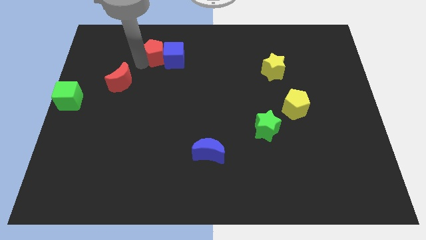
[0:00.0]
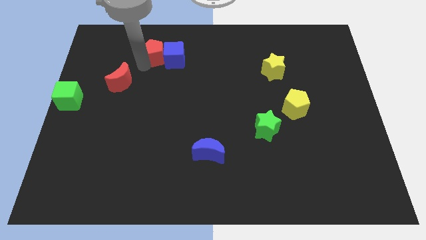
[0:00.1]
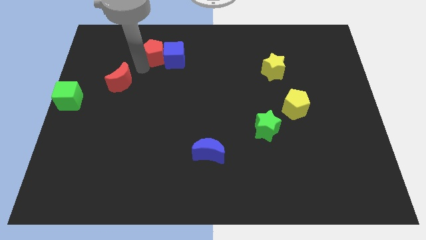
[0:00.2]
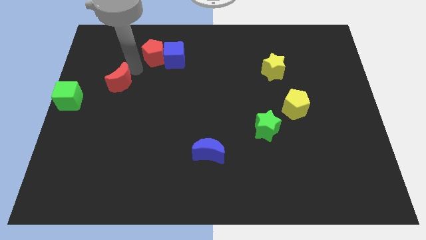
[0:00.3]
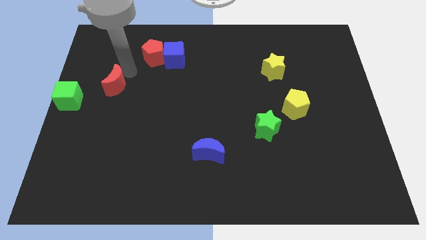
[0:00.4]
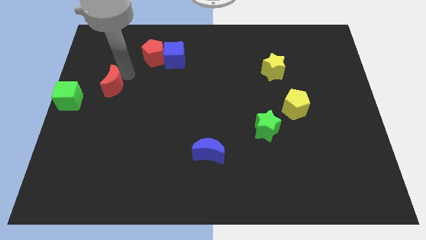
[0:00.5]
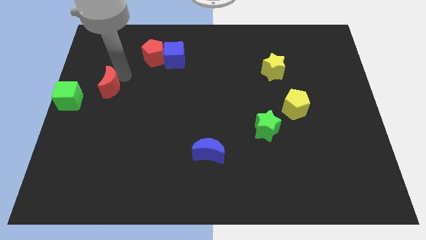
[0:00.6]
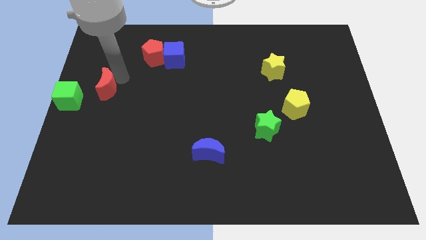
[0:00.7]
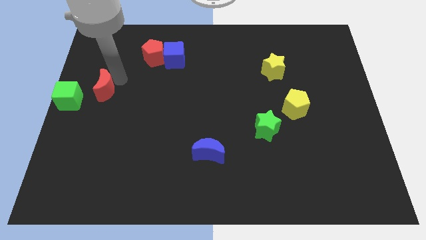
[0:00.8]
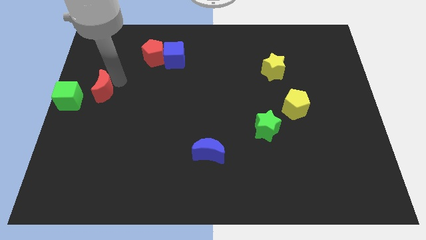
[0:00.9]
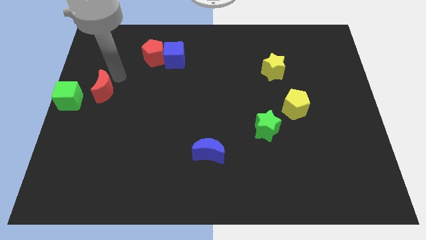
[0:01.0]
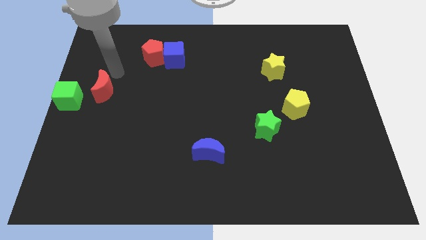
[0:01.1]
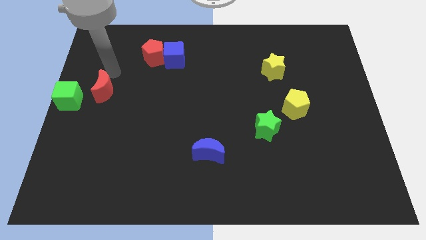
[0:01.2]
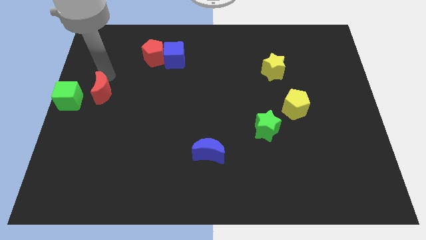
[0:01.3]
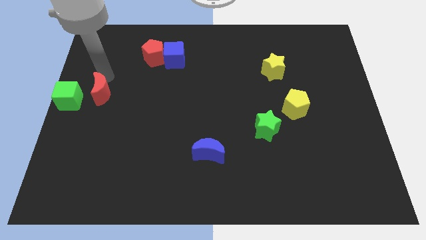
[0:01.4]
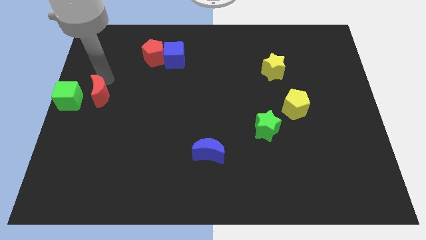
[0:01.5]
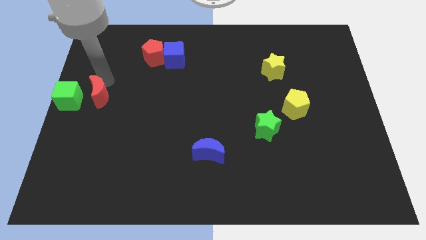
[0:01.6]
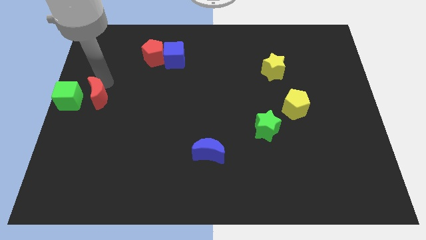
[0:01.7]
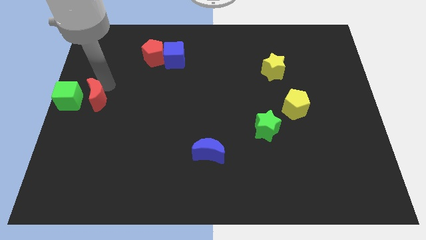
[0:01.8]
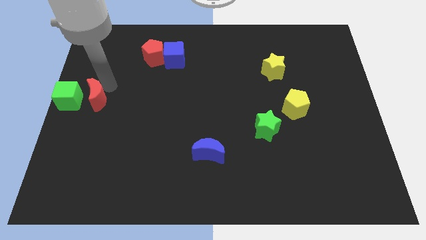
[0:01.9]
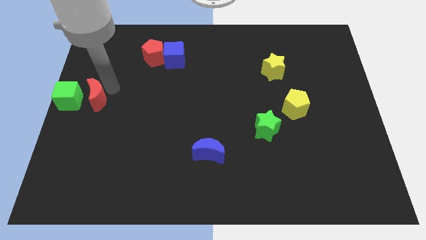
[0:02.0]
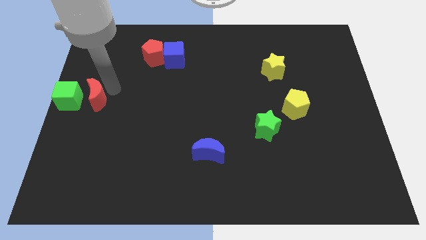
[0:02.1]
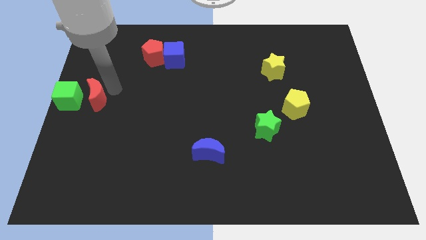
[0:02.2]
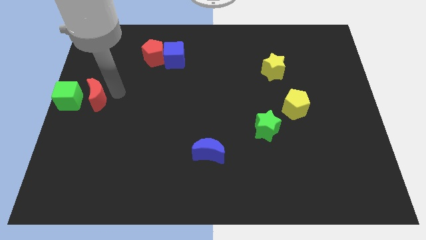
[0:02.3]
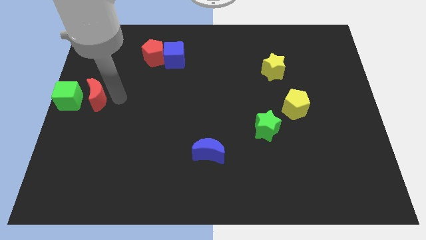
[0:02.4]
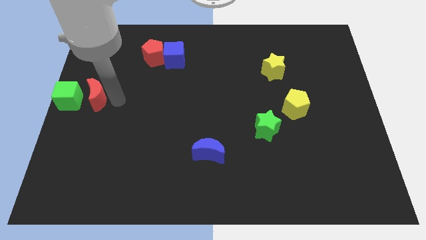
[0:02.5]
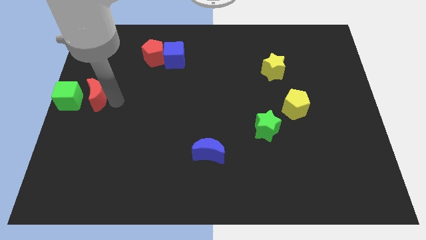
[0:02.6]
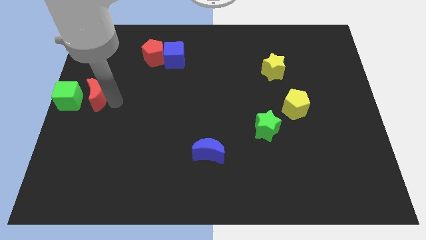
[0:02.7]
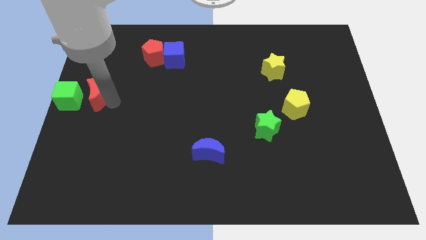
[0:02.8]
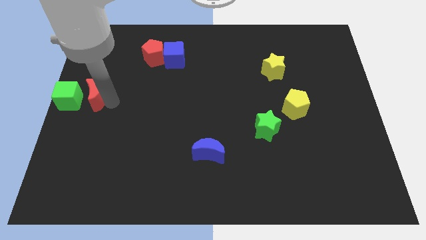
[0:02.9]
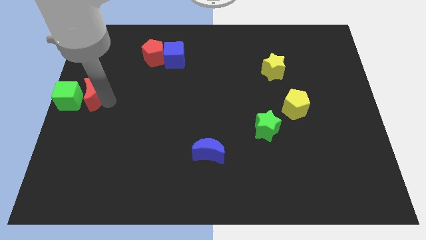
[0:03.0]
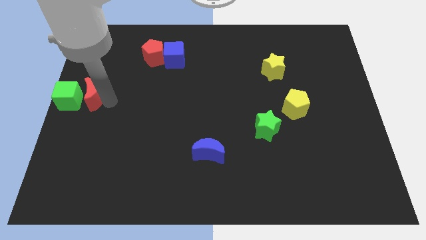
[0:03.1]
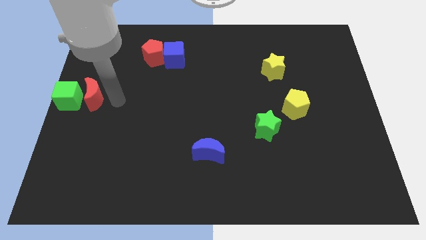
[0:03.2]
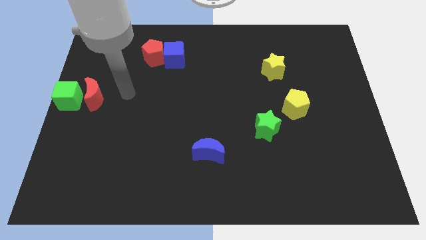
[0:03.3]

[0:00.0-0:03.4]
place the red moon to the right side of green cube

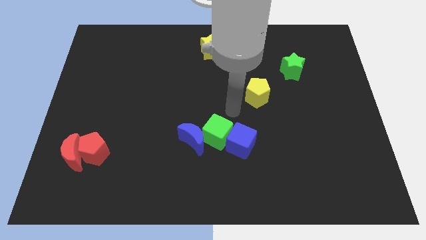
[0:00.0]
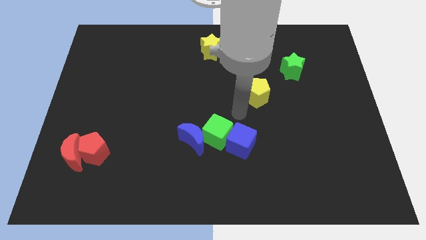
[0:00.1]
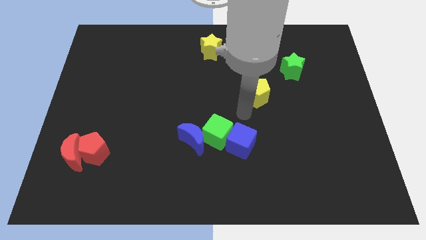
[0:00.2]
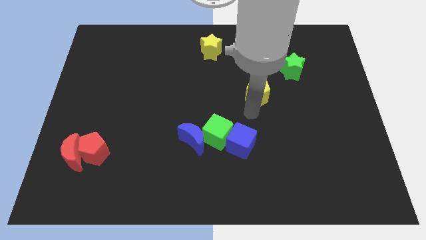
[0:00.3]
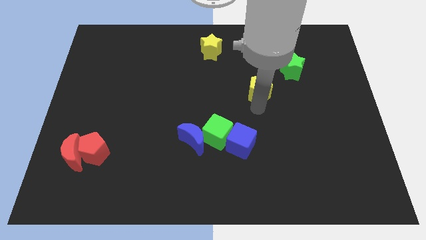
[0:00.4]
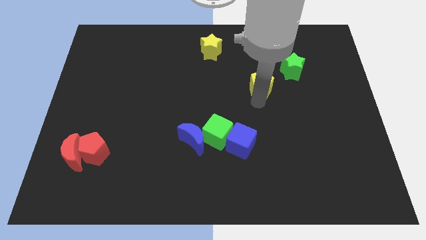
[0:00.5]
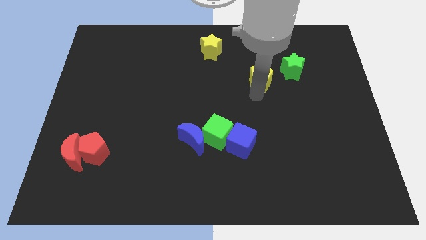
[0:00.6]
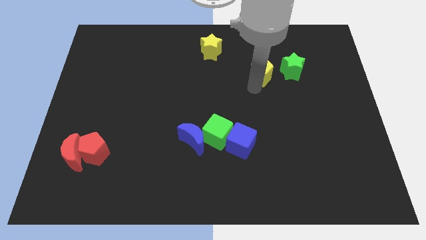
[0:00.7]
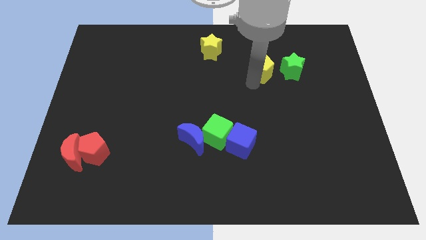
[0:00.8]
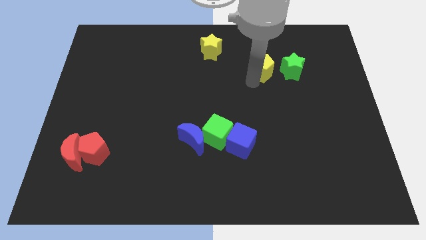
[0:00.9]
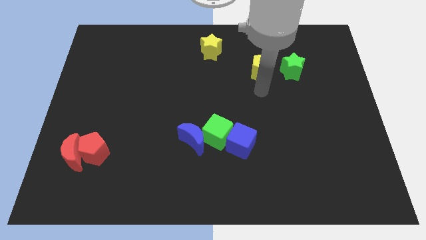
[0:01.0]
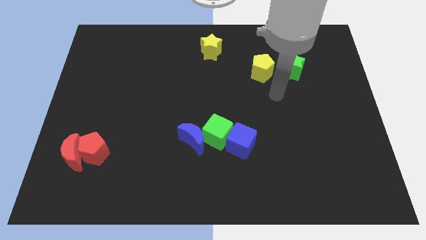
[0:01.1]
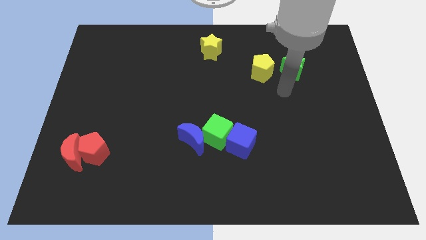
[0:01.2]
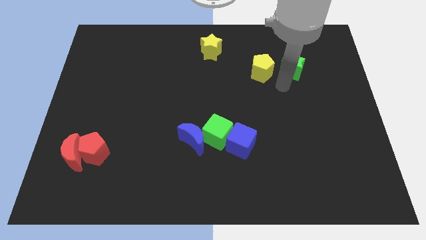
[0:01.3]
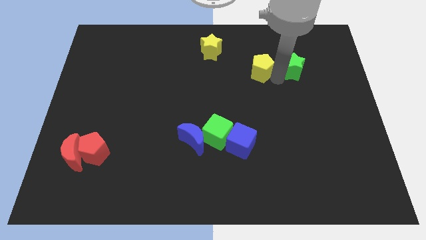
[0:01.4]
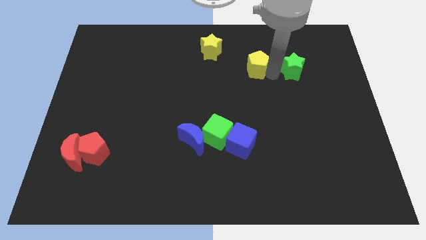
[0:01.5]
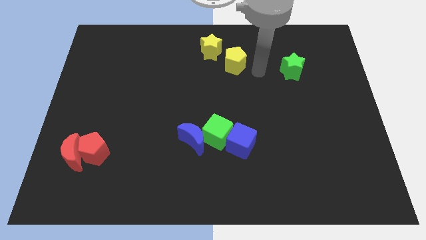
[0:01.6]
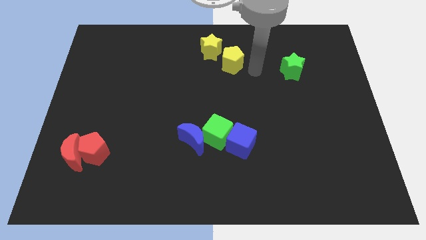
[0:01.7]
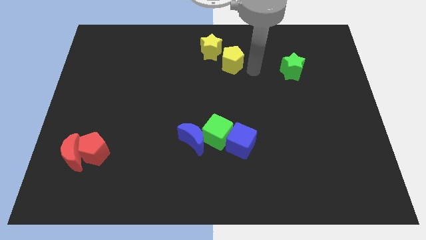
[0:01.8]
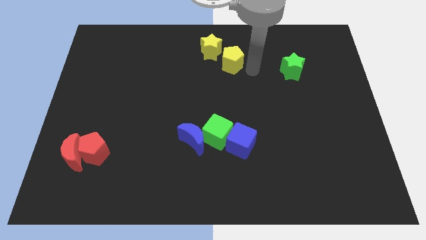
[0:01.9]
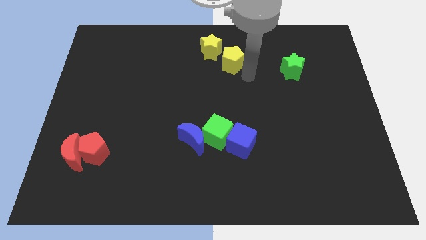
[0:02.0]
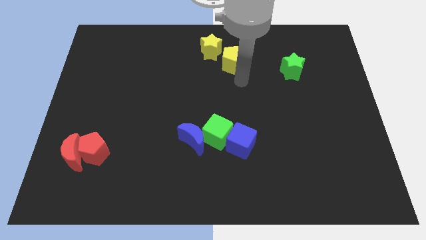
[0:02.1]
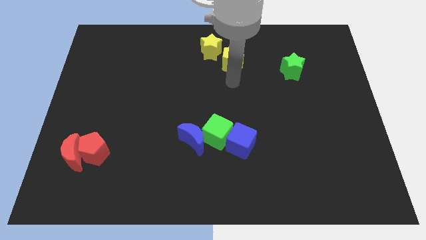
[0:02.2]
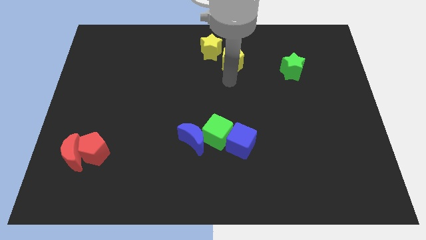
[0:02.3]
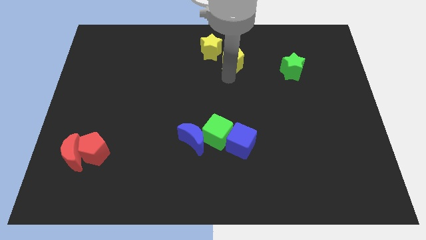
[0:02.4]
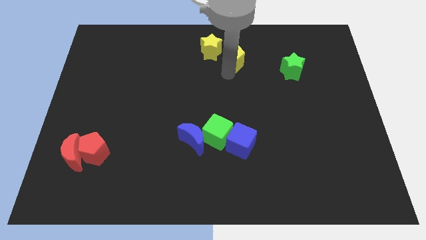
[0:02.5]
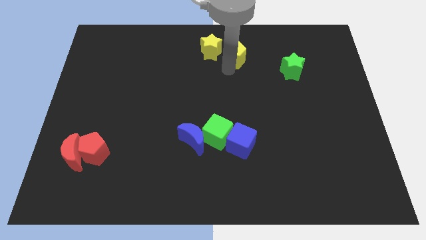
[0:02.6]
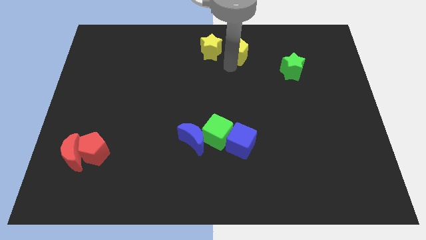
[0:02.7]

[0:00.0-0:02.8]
push the yellow pentagon to the bottom right of the yellow star

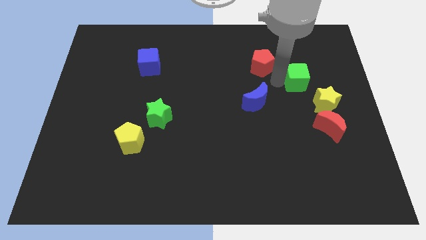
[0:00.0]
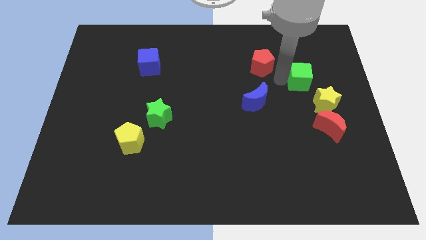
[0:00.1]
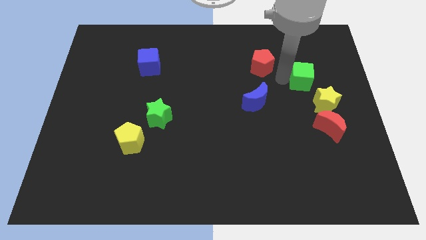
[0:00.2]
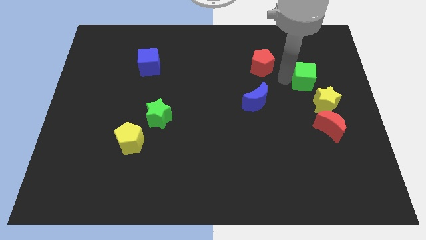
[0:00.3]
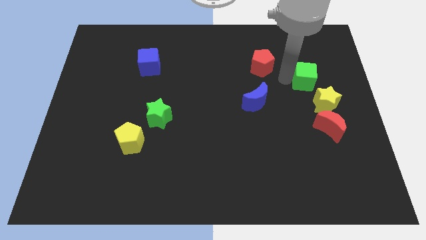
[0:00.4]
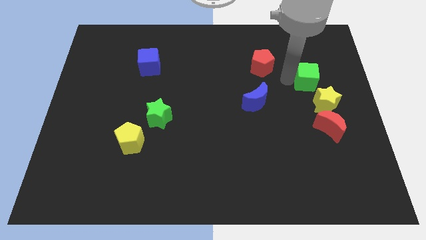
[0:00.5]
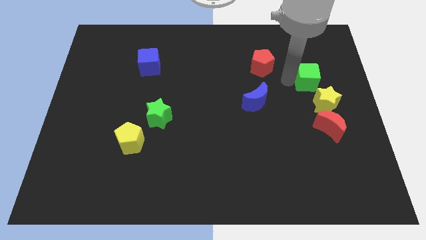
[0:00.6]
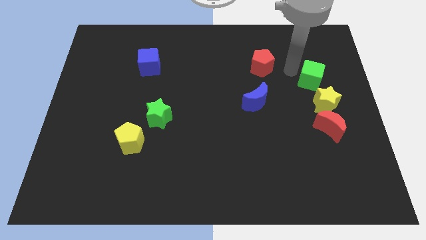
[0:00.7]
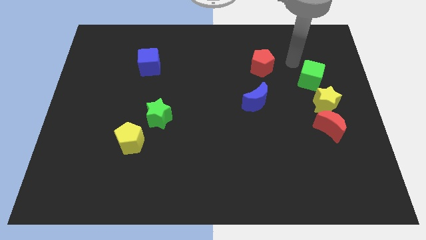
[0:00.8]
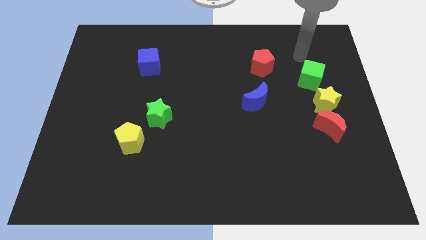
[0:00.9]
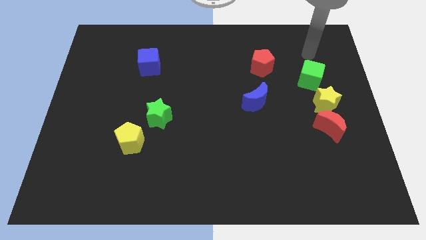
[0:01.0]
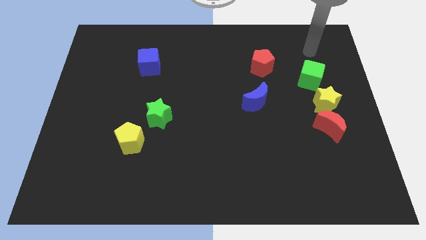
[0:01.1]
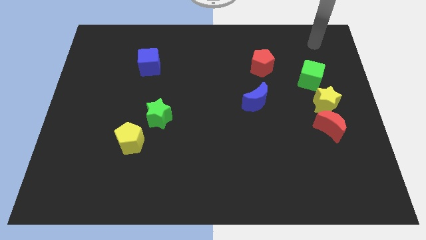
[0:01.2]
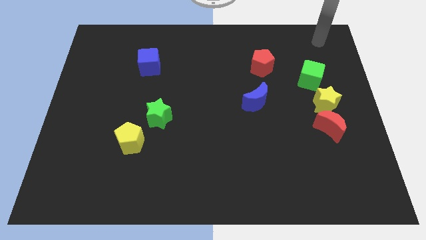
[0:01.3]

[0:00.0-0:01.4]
move the green cube to the right of the board

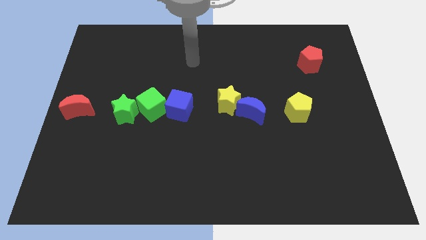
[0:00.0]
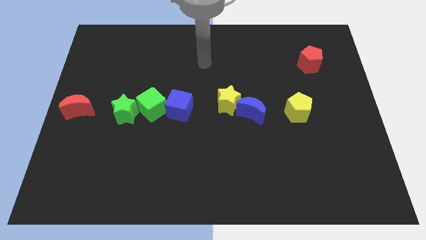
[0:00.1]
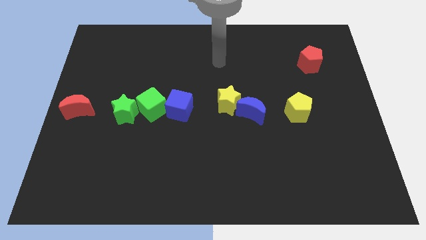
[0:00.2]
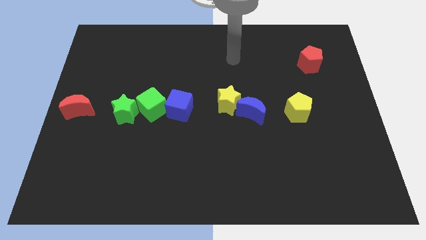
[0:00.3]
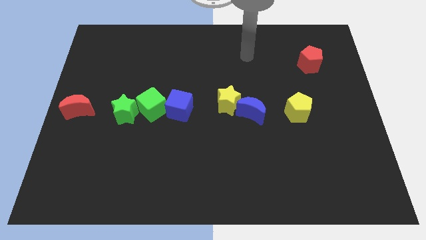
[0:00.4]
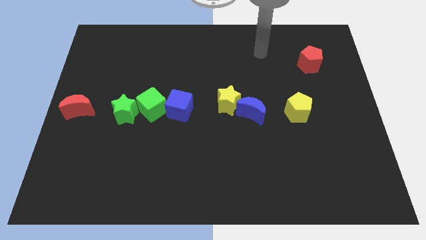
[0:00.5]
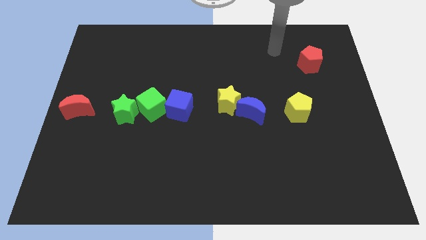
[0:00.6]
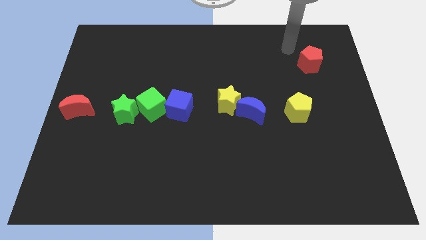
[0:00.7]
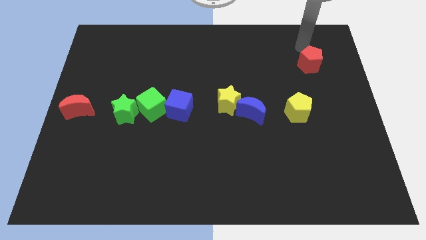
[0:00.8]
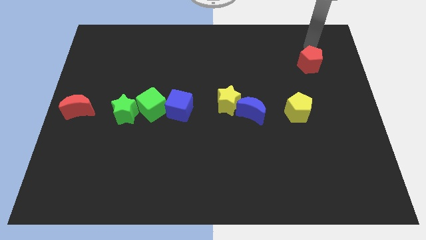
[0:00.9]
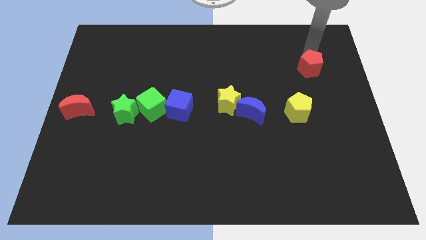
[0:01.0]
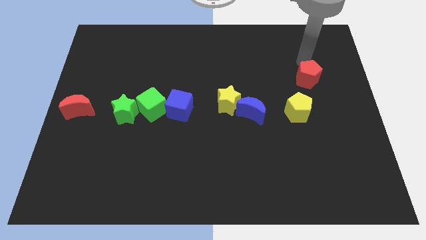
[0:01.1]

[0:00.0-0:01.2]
drag your arm towards the red pentagon

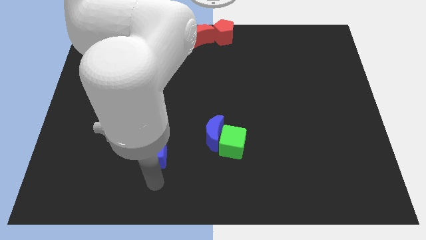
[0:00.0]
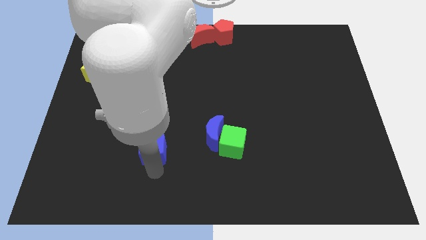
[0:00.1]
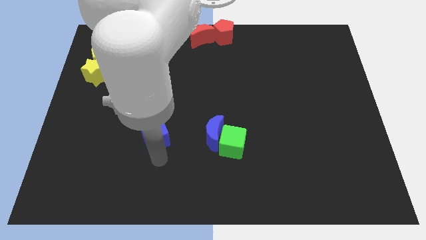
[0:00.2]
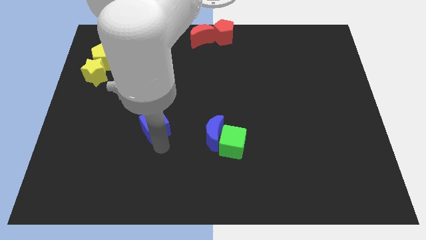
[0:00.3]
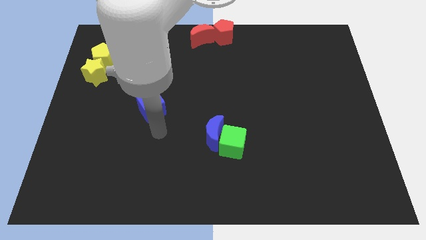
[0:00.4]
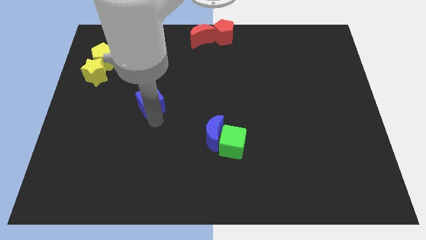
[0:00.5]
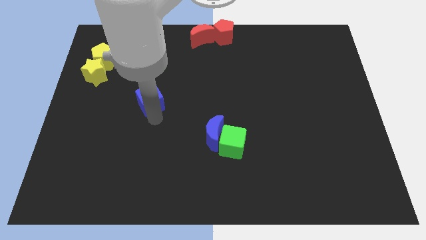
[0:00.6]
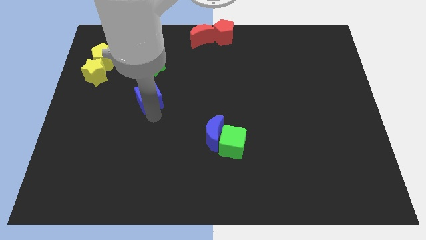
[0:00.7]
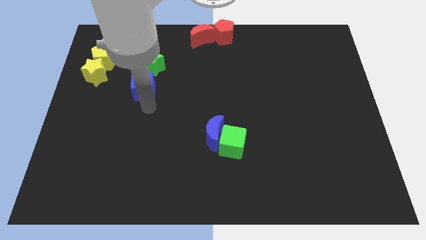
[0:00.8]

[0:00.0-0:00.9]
place the blue cube below the green star
